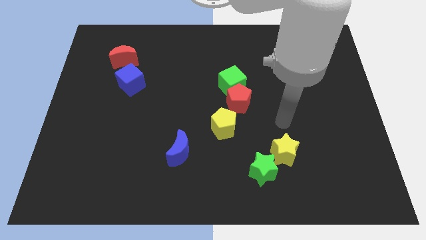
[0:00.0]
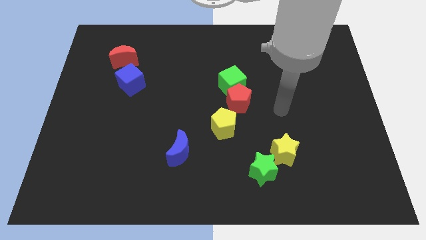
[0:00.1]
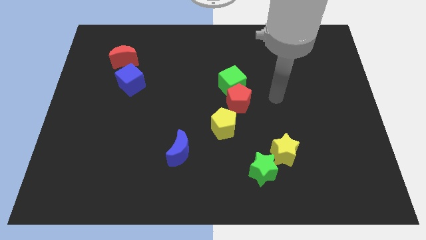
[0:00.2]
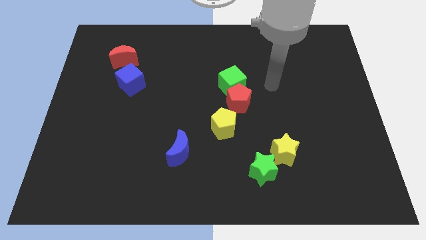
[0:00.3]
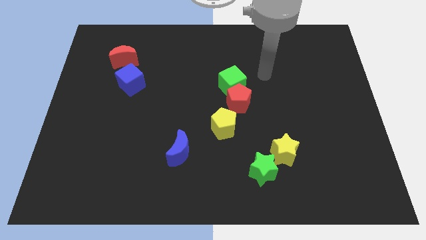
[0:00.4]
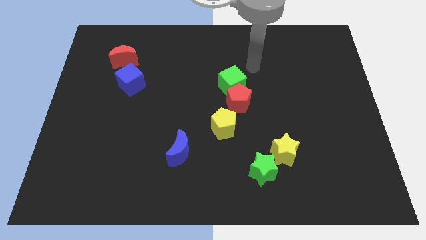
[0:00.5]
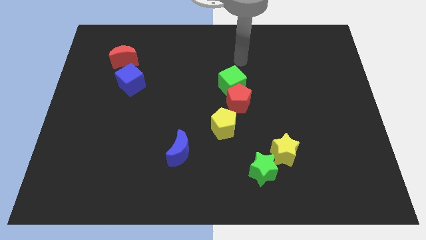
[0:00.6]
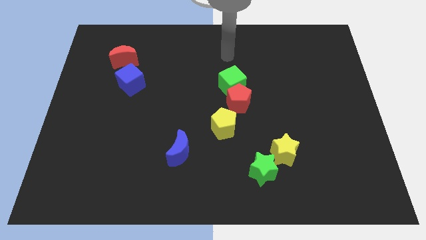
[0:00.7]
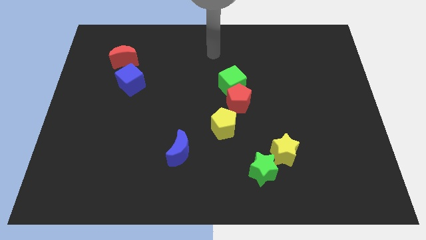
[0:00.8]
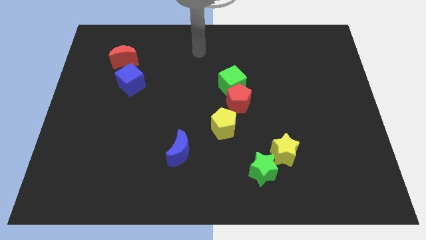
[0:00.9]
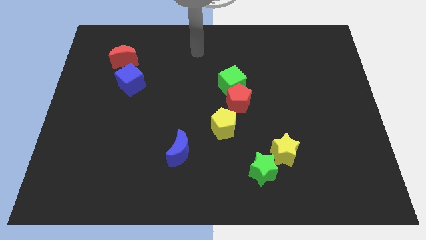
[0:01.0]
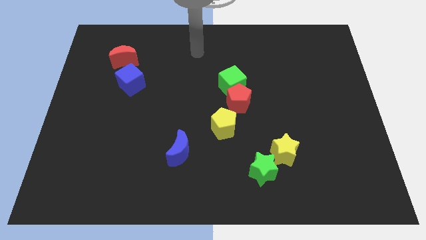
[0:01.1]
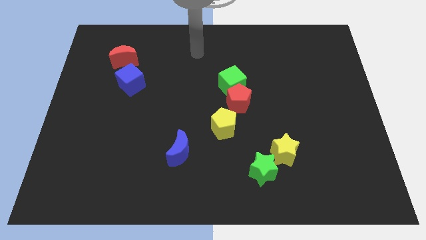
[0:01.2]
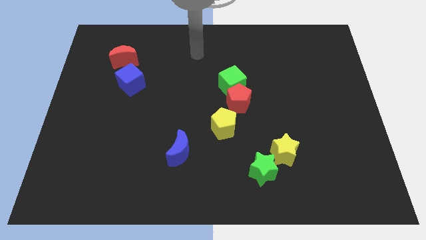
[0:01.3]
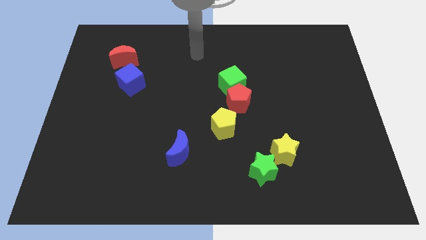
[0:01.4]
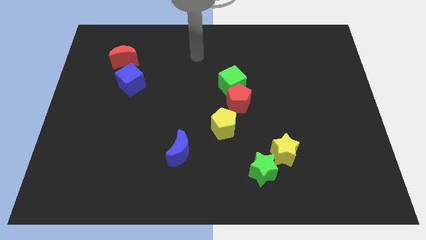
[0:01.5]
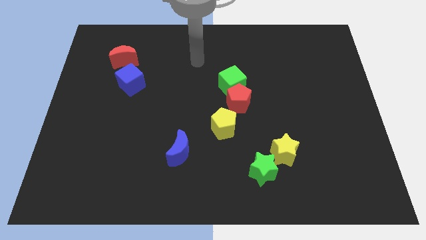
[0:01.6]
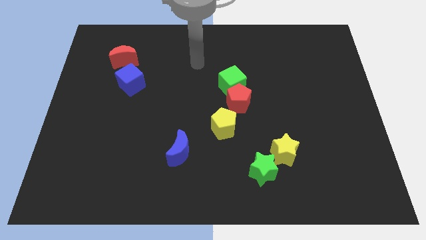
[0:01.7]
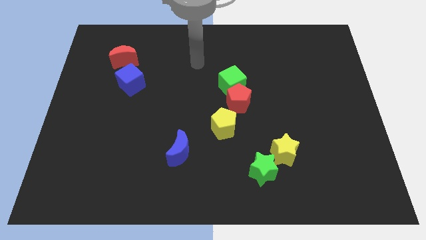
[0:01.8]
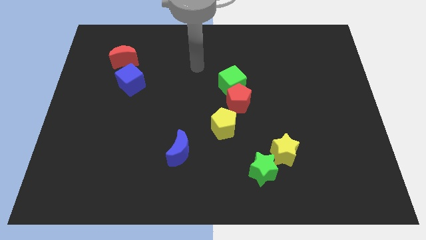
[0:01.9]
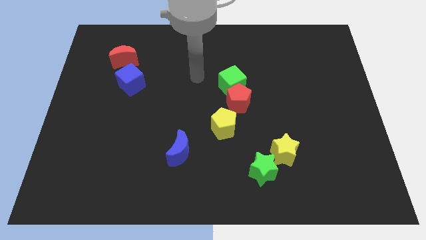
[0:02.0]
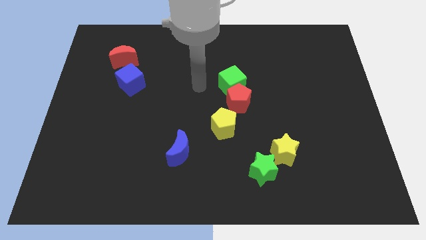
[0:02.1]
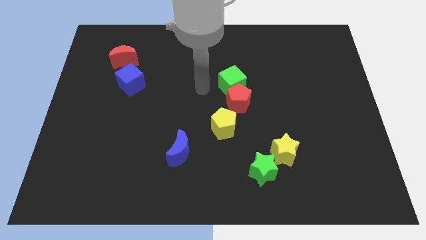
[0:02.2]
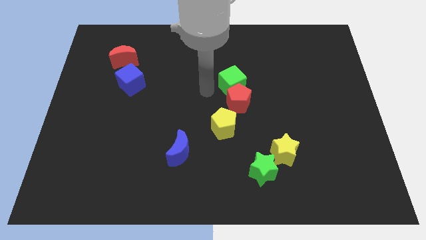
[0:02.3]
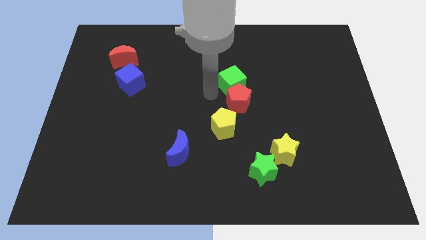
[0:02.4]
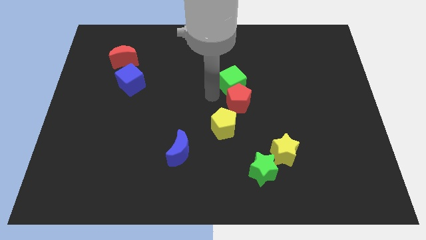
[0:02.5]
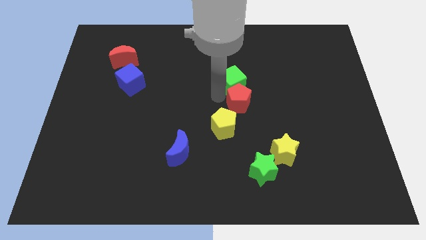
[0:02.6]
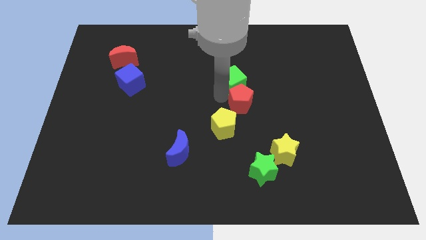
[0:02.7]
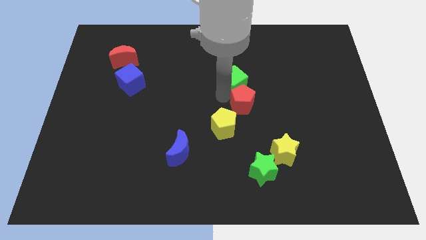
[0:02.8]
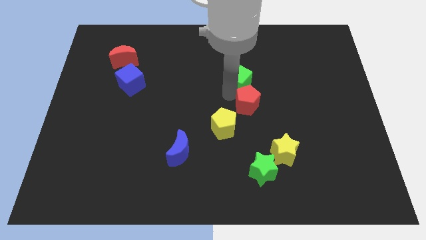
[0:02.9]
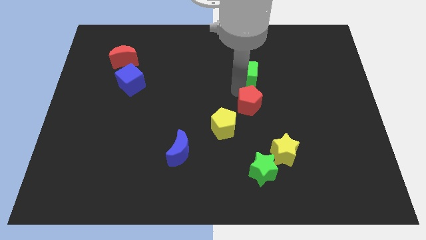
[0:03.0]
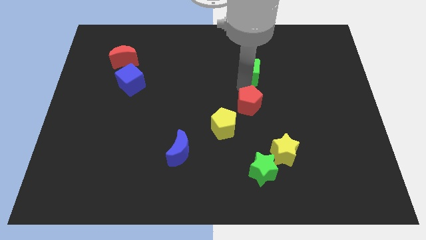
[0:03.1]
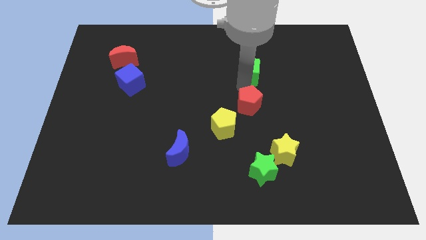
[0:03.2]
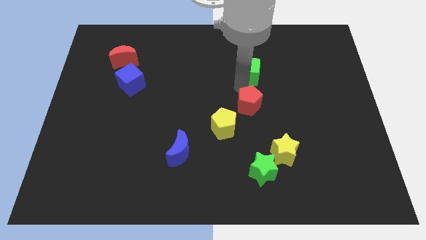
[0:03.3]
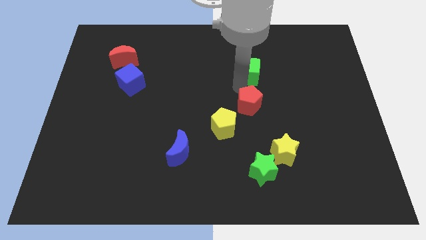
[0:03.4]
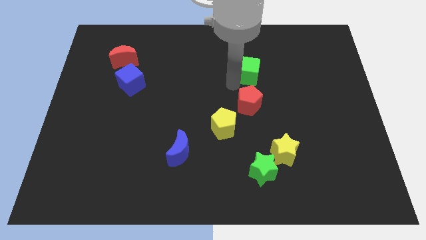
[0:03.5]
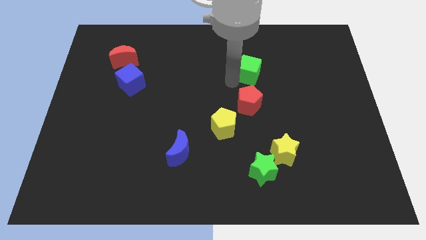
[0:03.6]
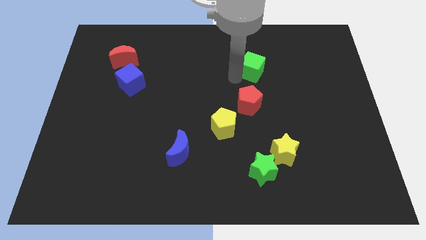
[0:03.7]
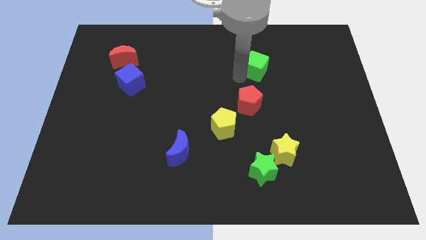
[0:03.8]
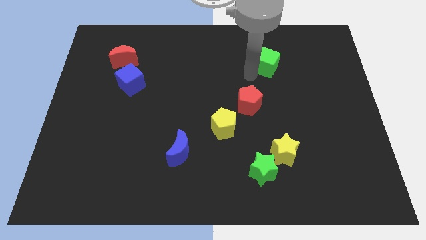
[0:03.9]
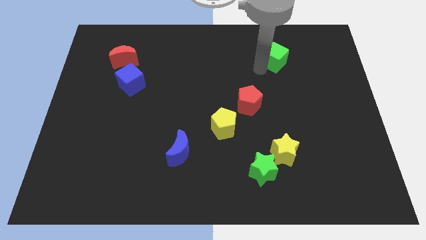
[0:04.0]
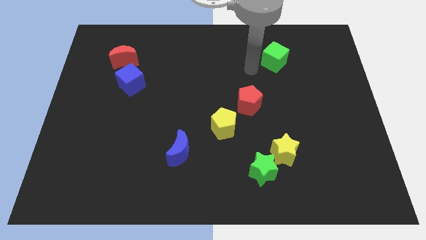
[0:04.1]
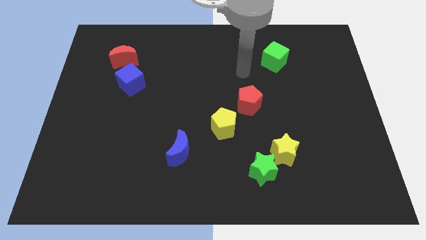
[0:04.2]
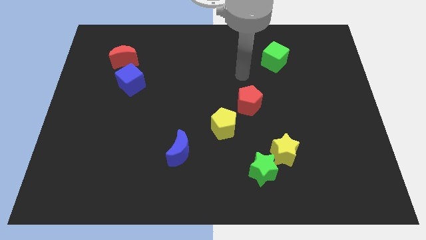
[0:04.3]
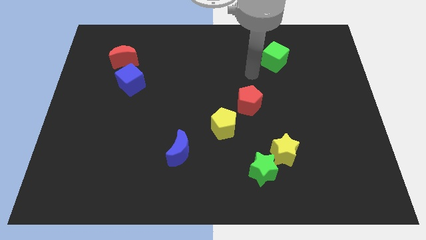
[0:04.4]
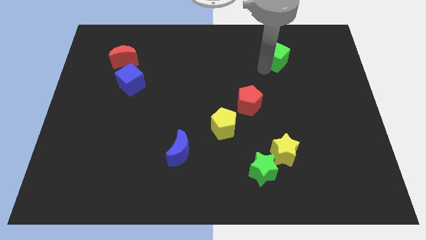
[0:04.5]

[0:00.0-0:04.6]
place the green cube to the right of the red crescent

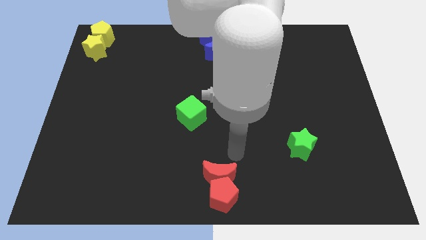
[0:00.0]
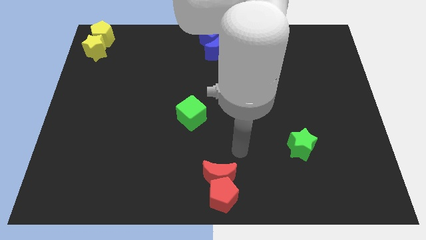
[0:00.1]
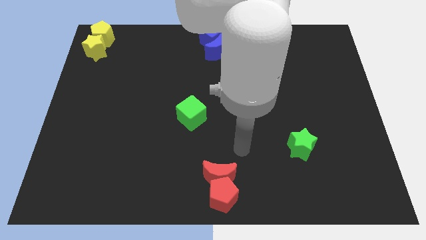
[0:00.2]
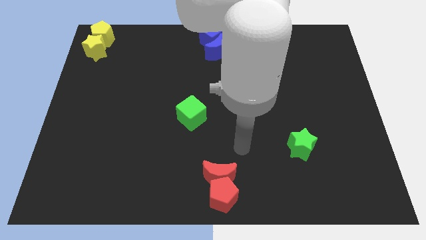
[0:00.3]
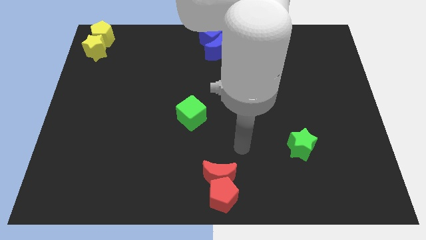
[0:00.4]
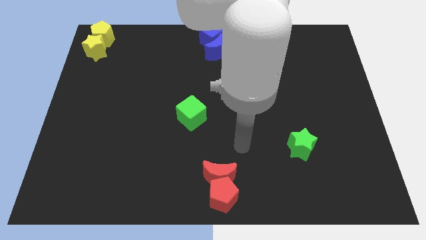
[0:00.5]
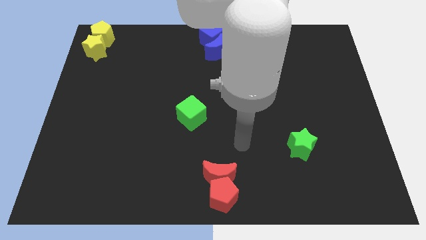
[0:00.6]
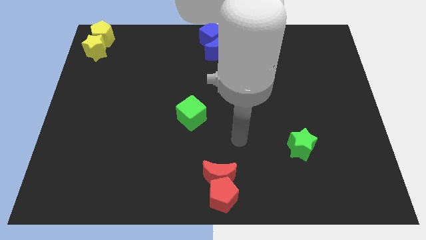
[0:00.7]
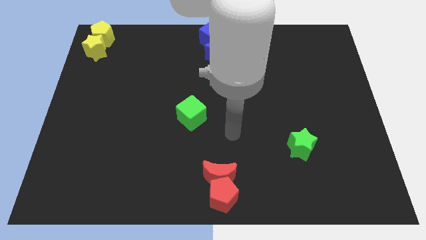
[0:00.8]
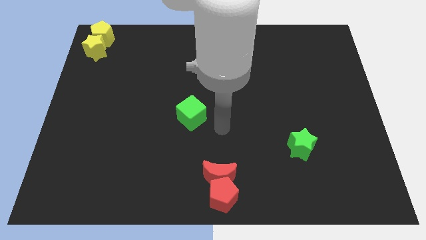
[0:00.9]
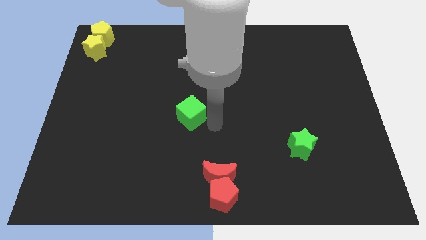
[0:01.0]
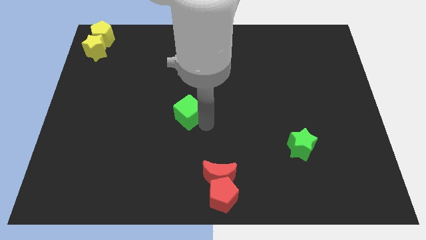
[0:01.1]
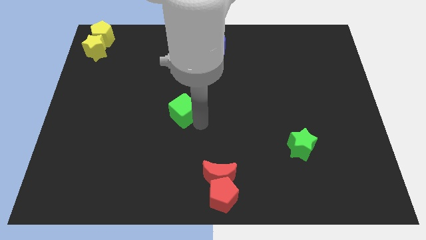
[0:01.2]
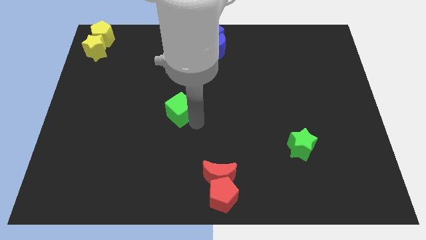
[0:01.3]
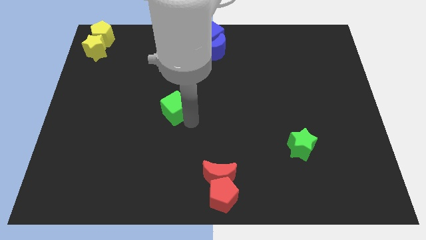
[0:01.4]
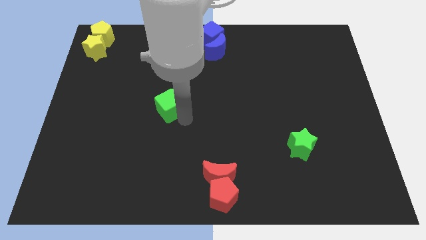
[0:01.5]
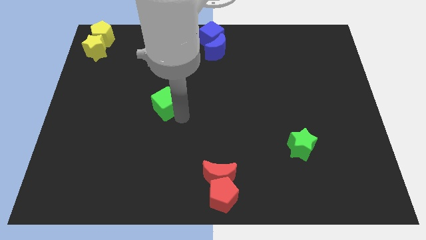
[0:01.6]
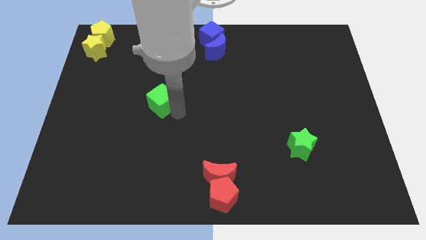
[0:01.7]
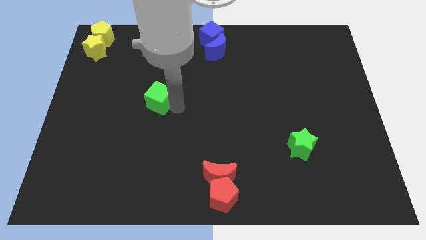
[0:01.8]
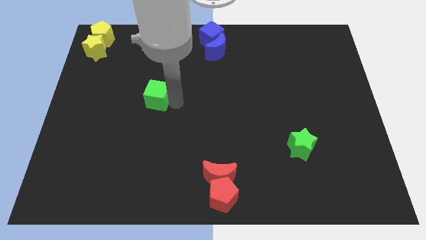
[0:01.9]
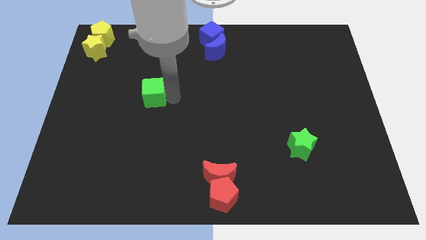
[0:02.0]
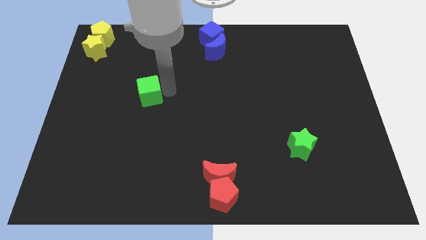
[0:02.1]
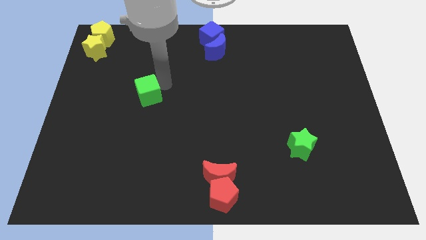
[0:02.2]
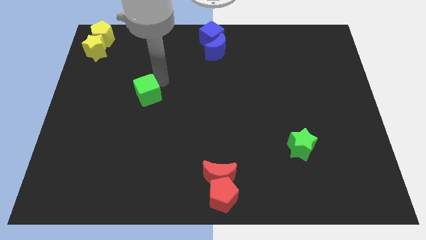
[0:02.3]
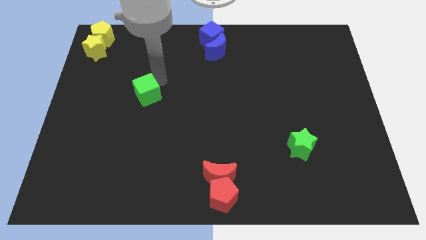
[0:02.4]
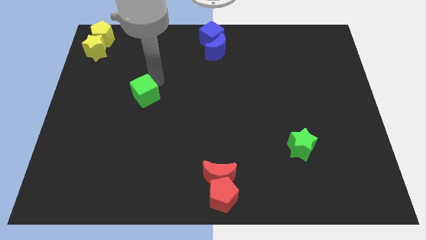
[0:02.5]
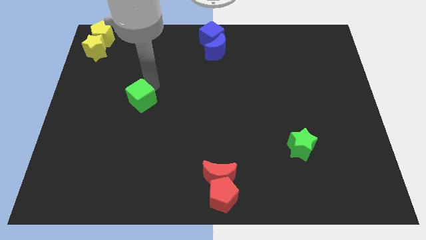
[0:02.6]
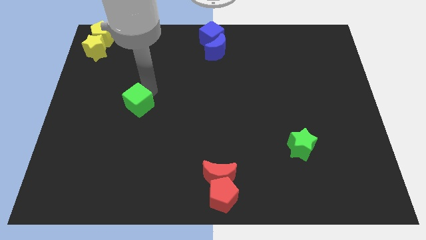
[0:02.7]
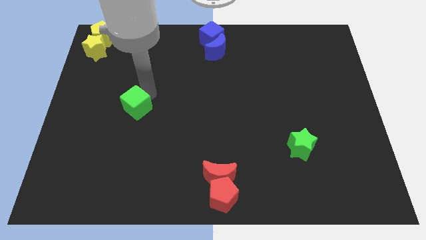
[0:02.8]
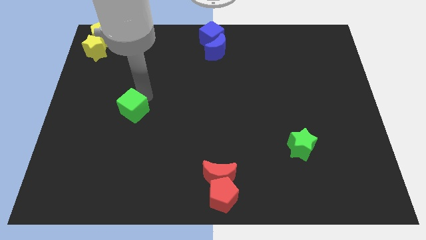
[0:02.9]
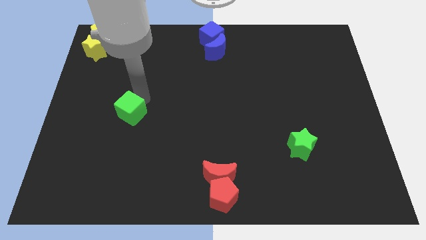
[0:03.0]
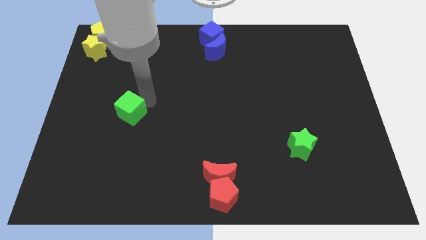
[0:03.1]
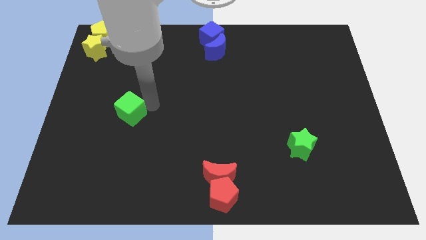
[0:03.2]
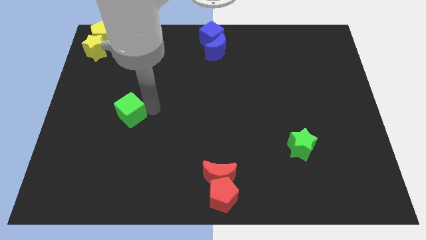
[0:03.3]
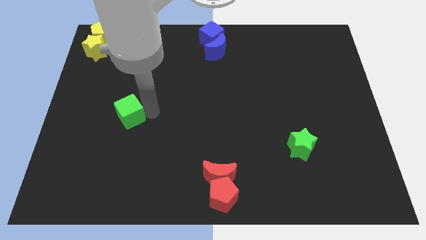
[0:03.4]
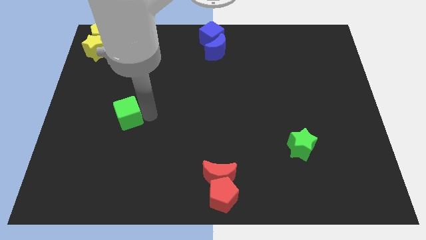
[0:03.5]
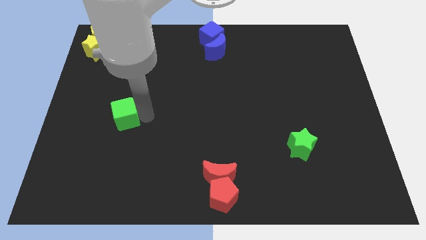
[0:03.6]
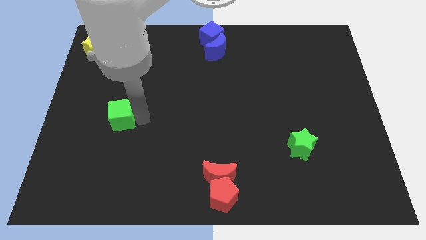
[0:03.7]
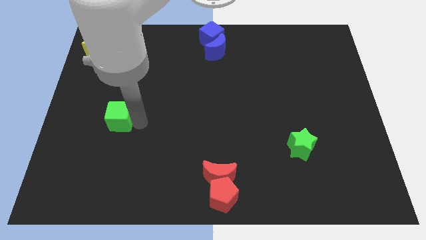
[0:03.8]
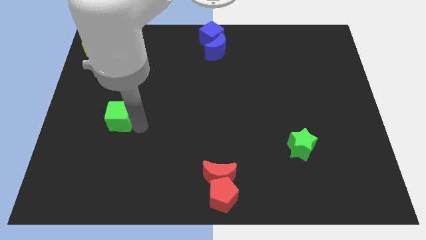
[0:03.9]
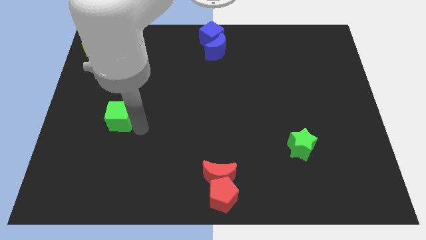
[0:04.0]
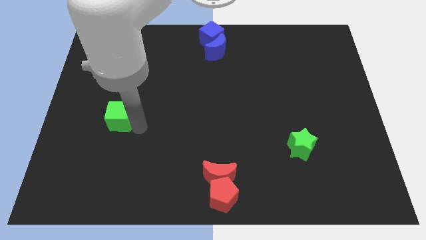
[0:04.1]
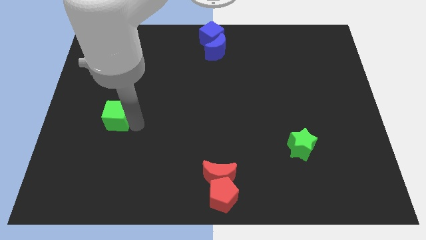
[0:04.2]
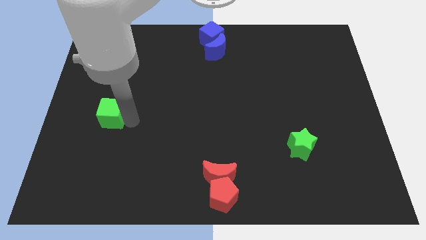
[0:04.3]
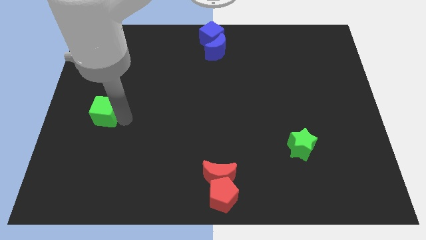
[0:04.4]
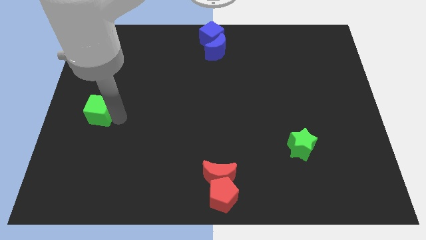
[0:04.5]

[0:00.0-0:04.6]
move the green cube to the left of the board
